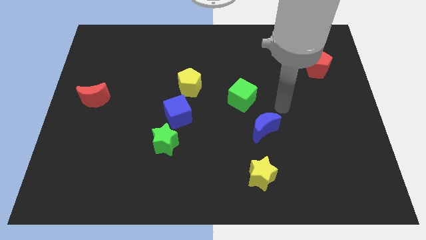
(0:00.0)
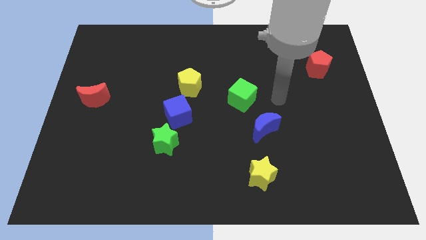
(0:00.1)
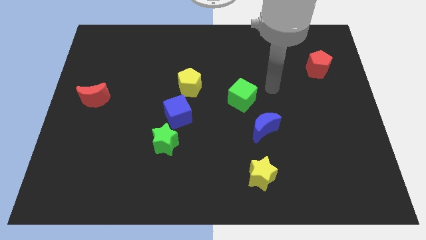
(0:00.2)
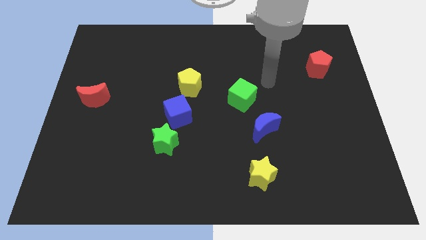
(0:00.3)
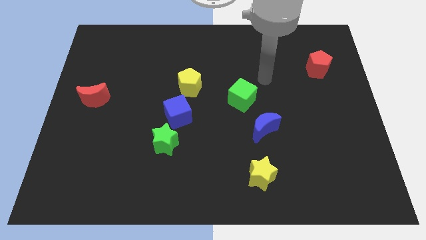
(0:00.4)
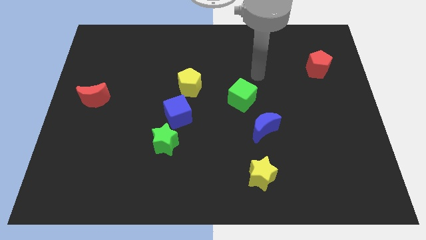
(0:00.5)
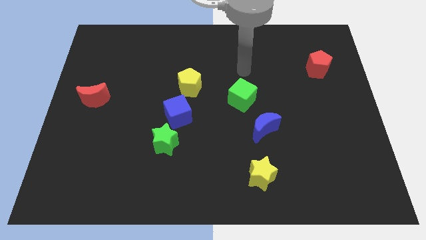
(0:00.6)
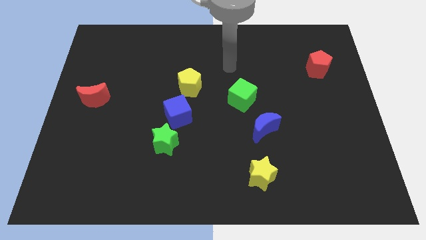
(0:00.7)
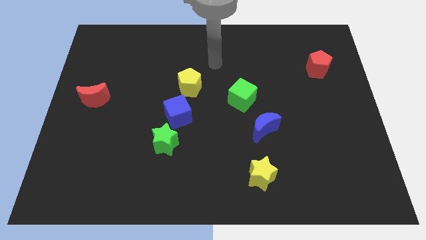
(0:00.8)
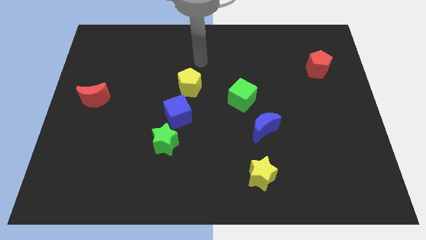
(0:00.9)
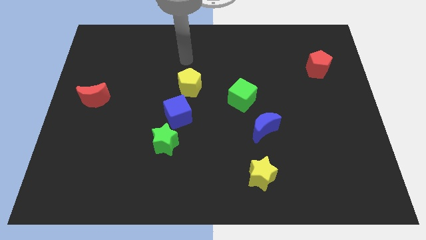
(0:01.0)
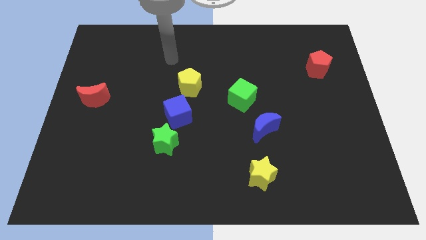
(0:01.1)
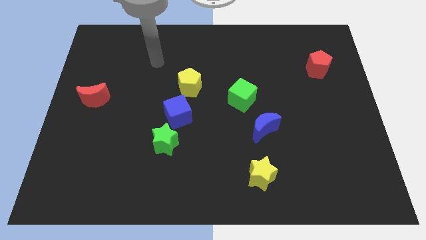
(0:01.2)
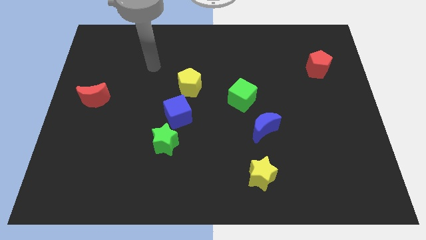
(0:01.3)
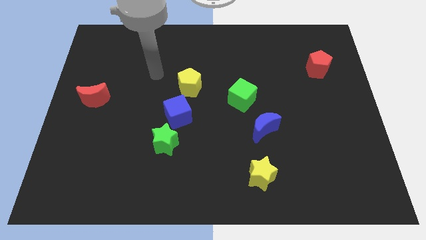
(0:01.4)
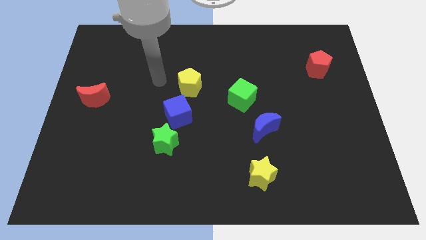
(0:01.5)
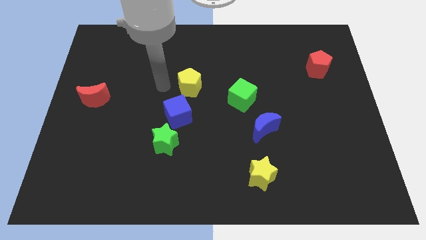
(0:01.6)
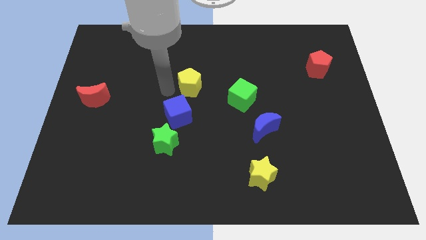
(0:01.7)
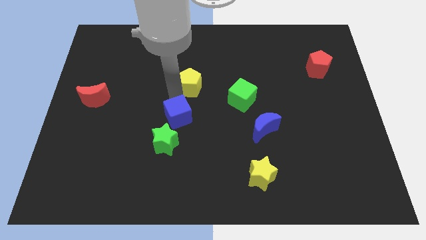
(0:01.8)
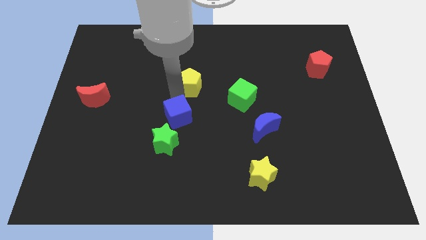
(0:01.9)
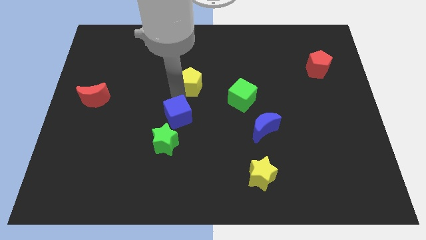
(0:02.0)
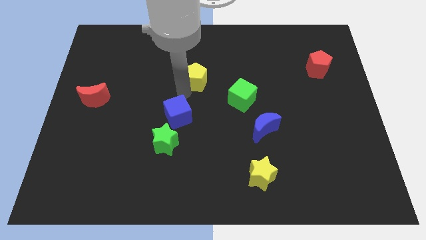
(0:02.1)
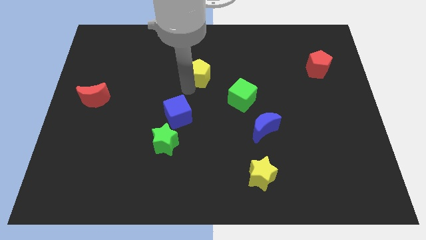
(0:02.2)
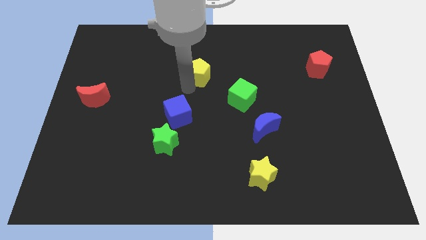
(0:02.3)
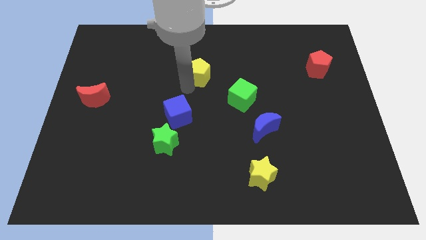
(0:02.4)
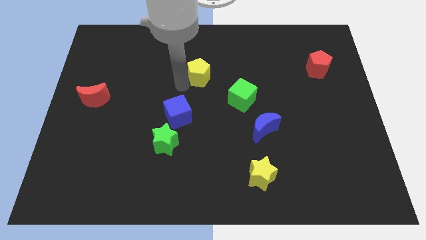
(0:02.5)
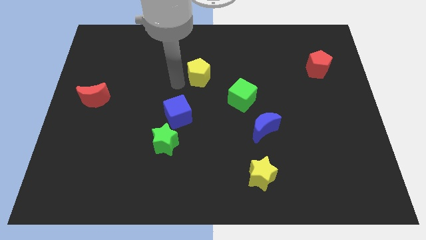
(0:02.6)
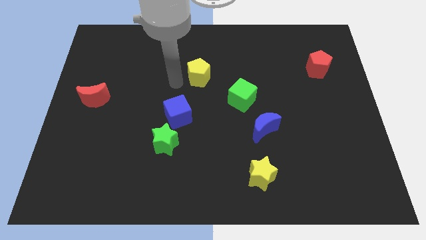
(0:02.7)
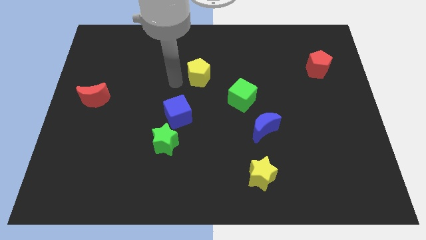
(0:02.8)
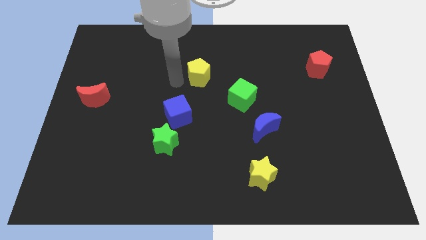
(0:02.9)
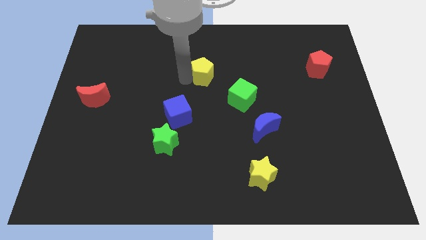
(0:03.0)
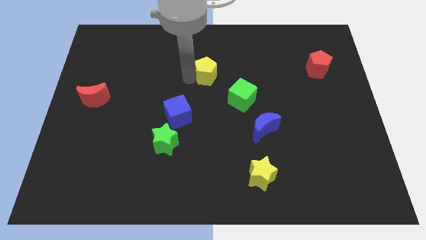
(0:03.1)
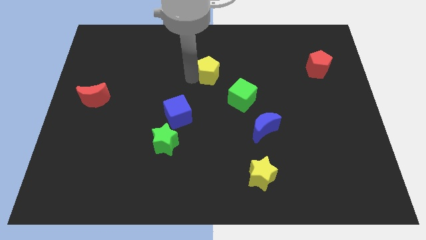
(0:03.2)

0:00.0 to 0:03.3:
push the yellow pentagon diagonal above blue cube

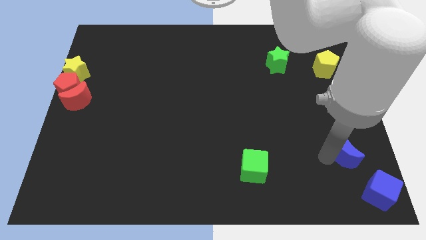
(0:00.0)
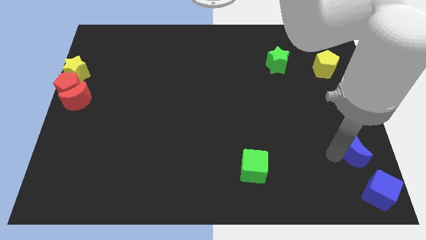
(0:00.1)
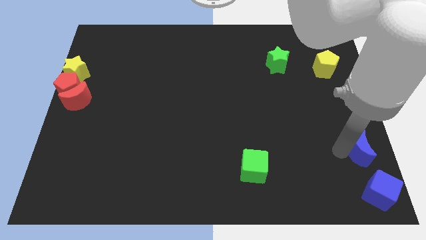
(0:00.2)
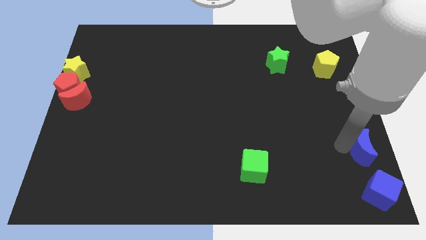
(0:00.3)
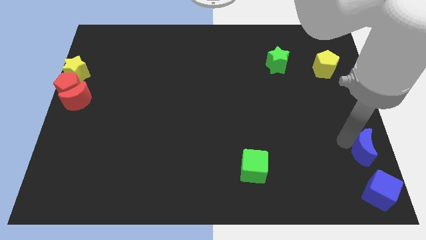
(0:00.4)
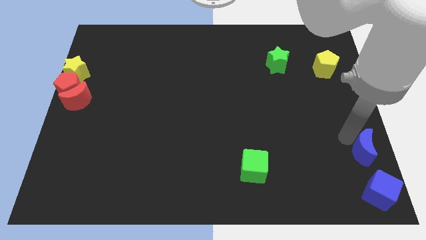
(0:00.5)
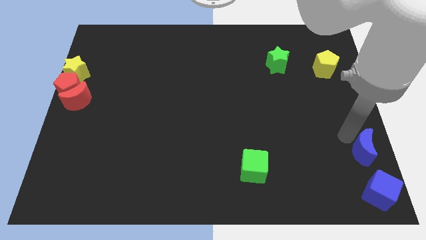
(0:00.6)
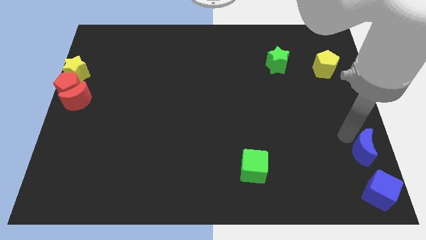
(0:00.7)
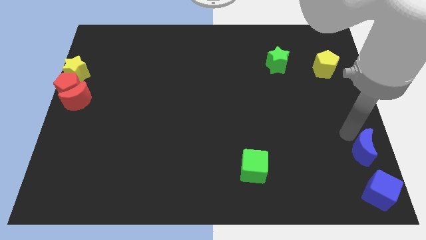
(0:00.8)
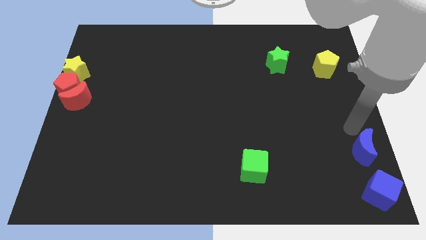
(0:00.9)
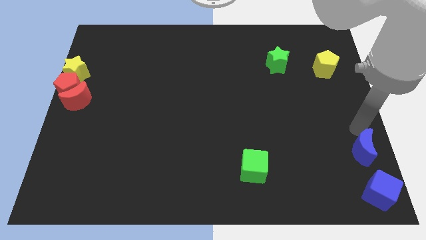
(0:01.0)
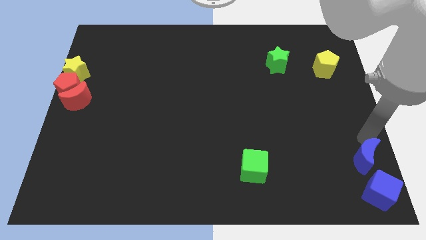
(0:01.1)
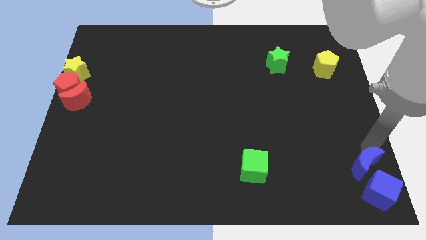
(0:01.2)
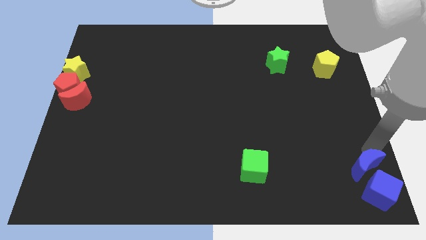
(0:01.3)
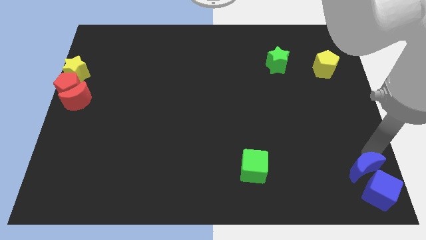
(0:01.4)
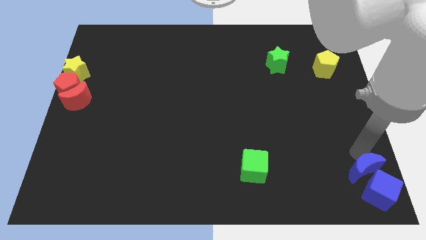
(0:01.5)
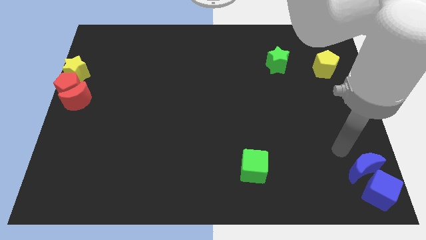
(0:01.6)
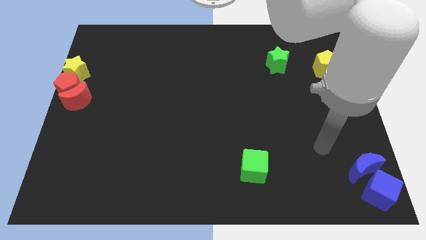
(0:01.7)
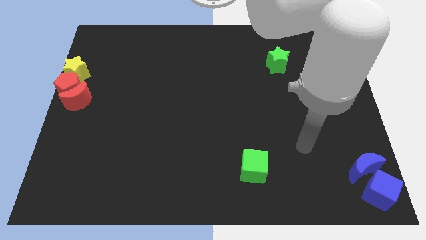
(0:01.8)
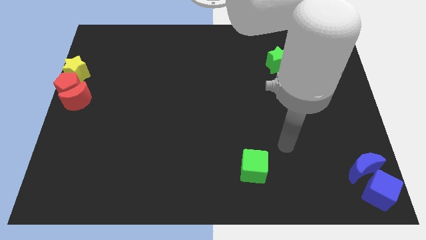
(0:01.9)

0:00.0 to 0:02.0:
push the blue moon close to the blue cube

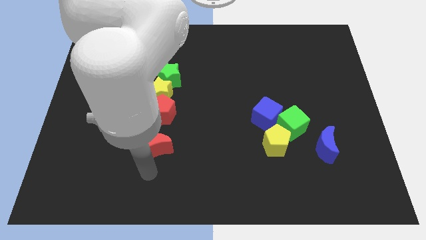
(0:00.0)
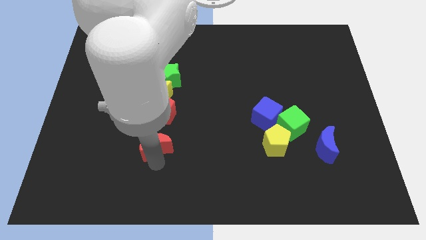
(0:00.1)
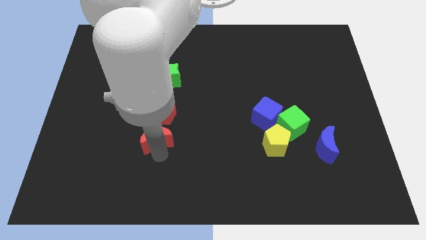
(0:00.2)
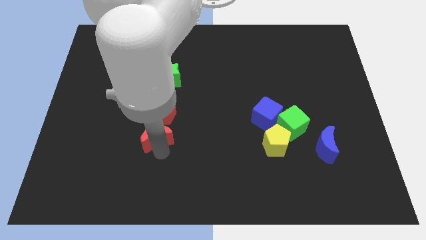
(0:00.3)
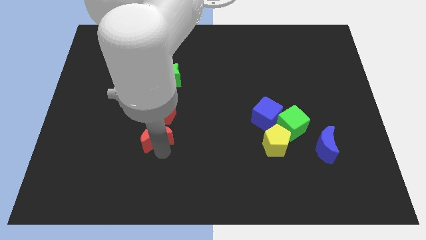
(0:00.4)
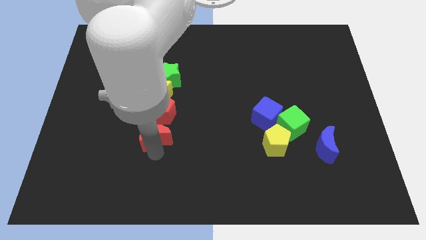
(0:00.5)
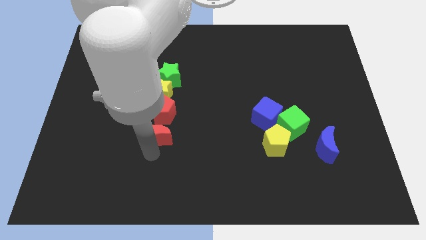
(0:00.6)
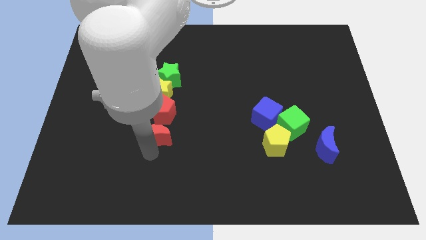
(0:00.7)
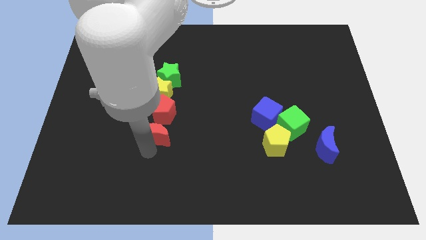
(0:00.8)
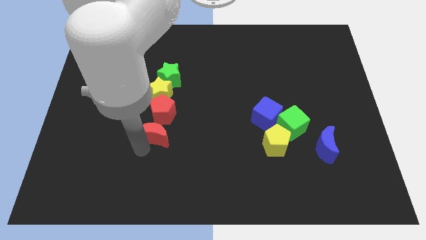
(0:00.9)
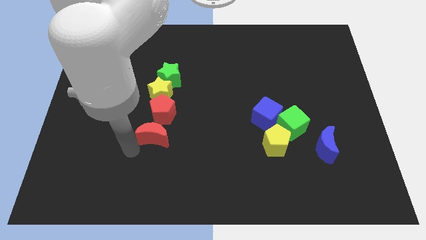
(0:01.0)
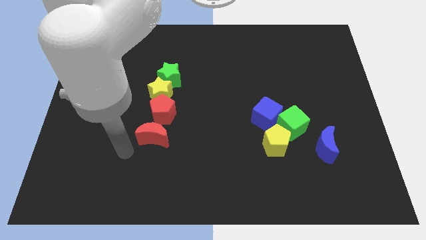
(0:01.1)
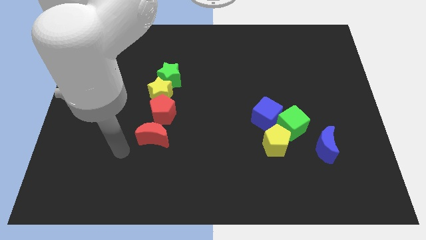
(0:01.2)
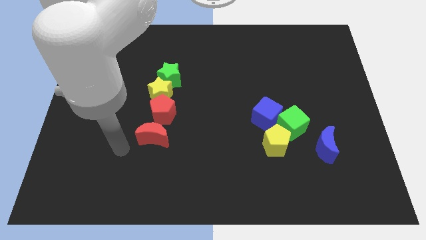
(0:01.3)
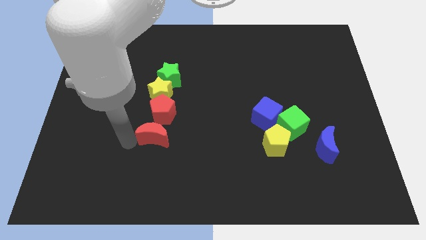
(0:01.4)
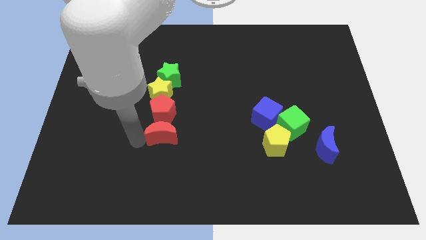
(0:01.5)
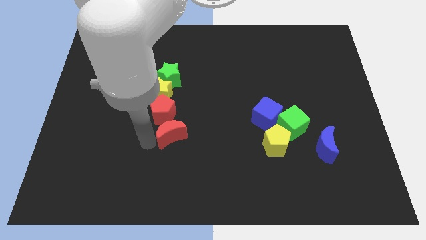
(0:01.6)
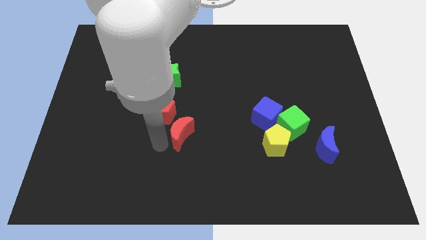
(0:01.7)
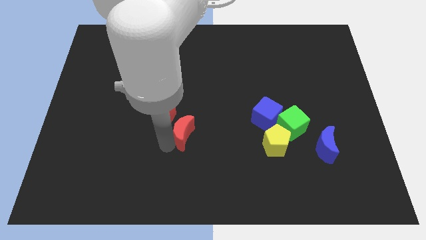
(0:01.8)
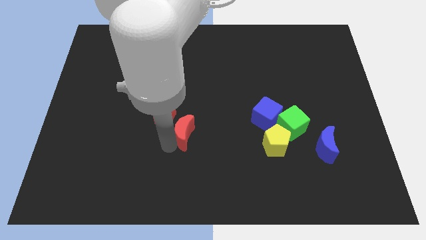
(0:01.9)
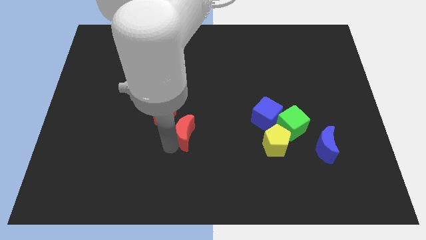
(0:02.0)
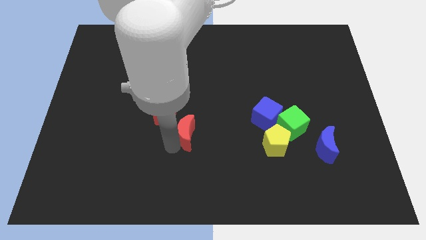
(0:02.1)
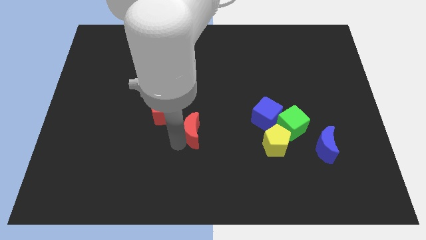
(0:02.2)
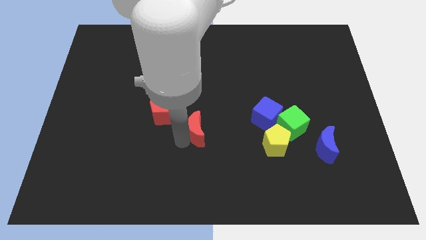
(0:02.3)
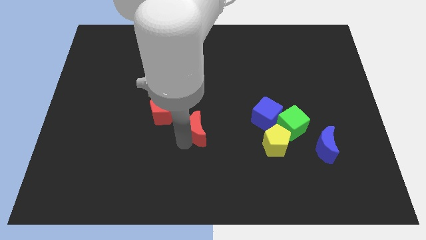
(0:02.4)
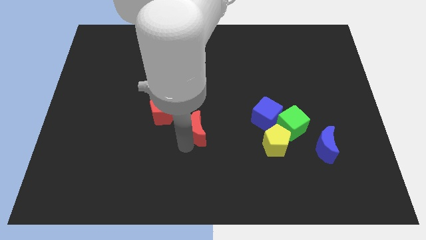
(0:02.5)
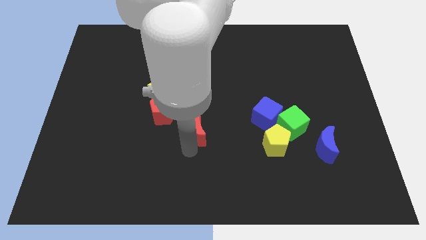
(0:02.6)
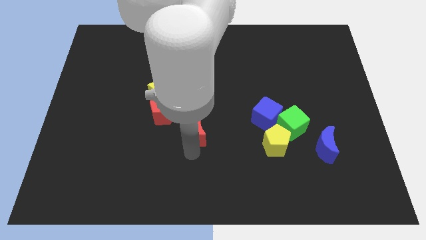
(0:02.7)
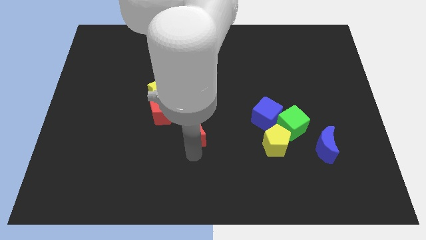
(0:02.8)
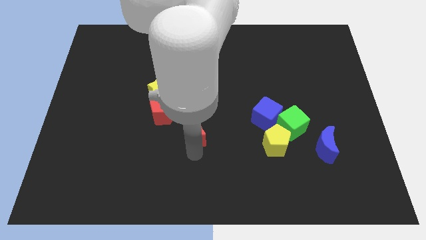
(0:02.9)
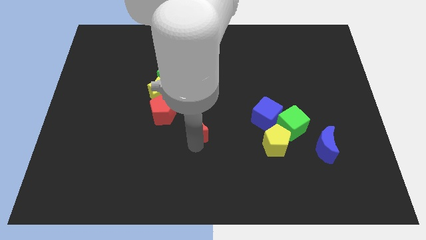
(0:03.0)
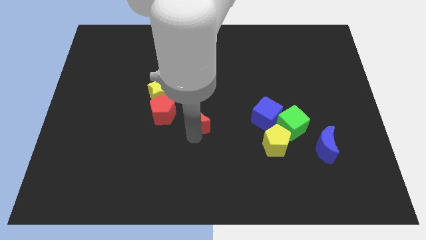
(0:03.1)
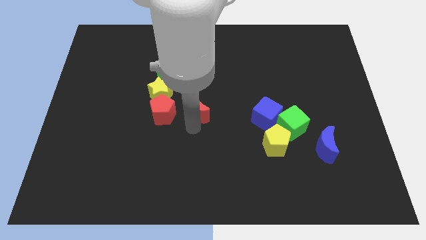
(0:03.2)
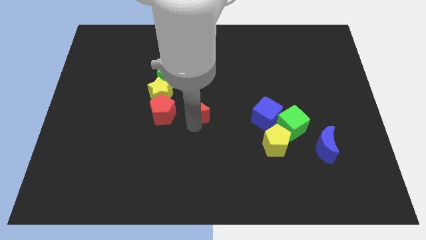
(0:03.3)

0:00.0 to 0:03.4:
place the red moon in between the red pentagon and blue cube

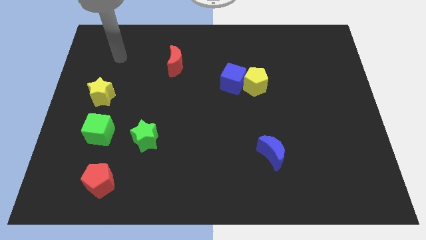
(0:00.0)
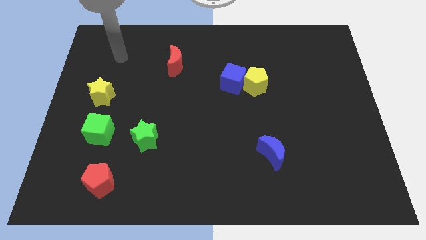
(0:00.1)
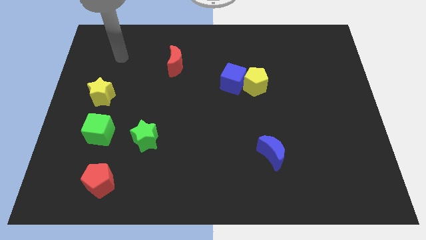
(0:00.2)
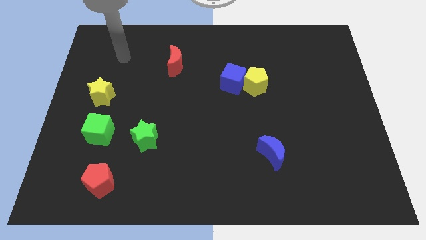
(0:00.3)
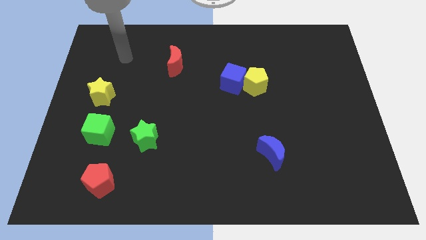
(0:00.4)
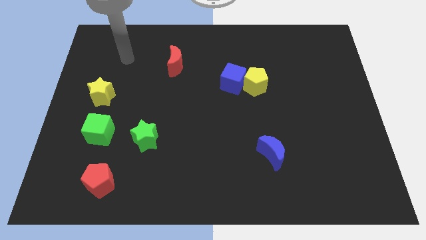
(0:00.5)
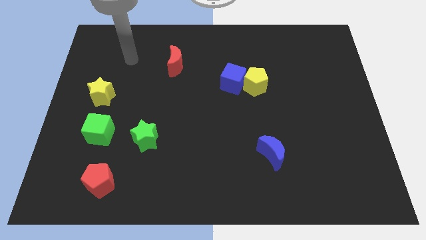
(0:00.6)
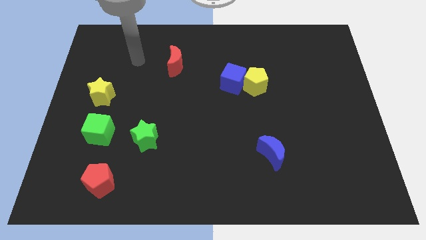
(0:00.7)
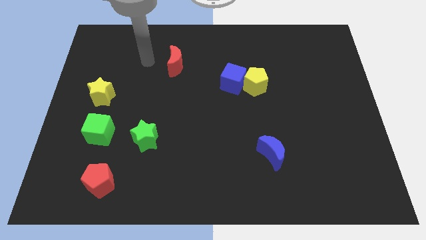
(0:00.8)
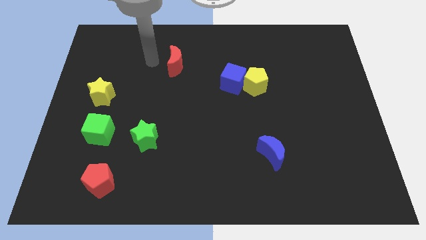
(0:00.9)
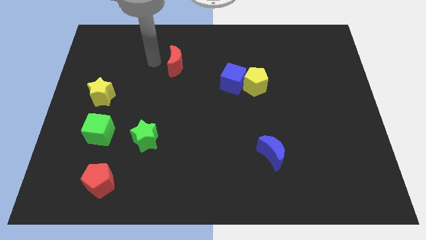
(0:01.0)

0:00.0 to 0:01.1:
point your arm at the left side of the red block
